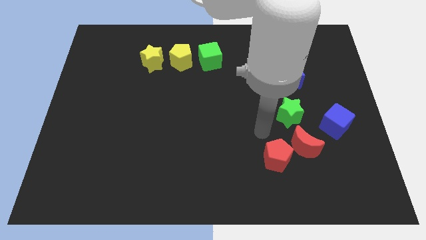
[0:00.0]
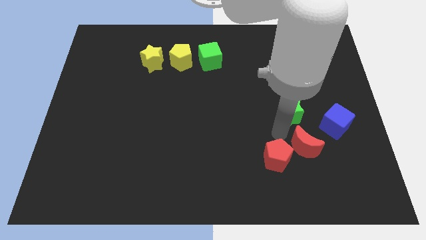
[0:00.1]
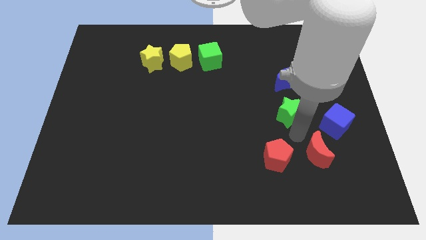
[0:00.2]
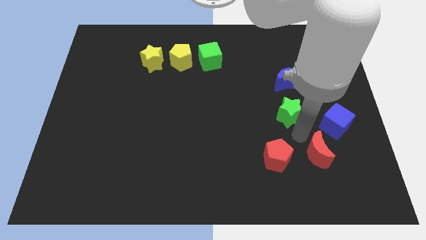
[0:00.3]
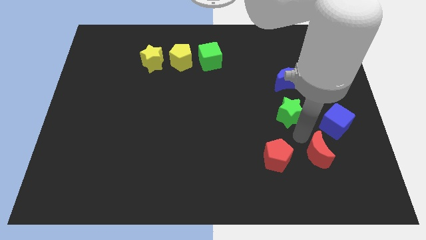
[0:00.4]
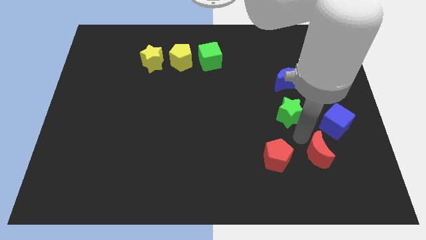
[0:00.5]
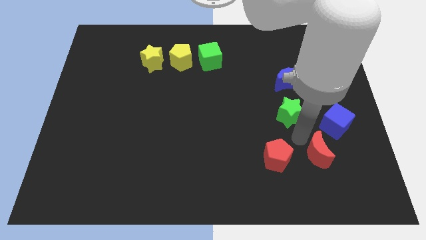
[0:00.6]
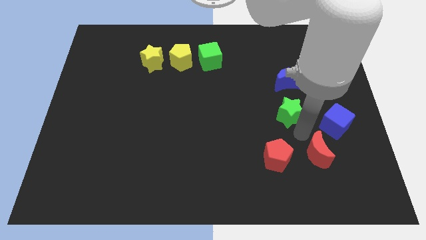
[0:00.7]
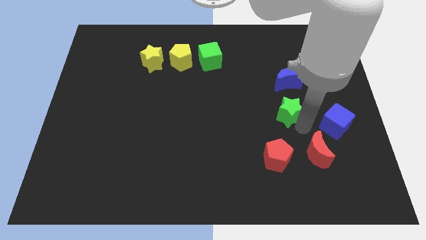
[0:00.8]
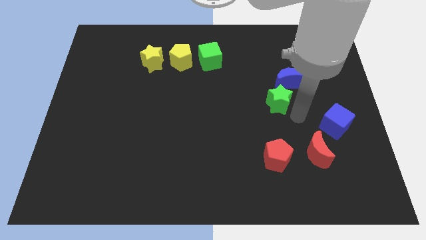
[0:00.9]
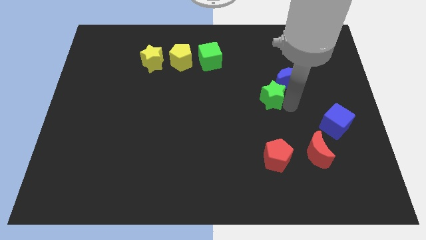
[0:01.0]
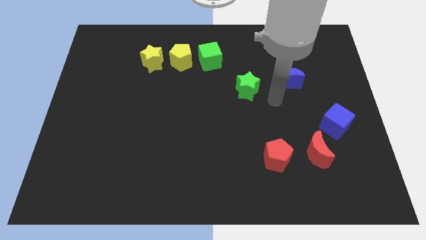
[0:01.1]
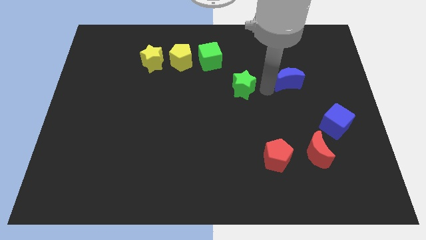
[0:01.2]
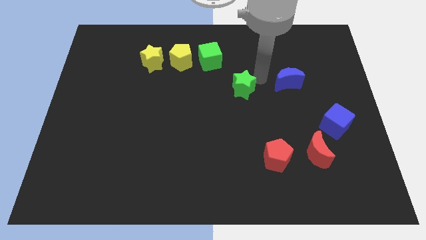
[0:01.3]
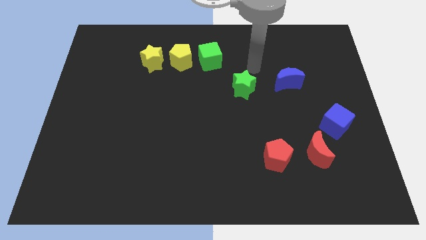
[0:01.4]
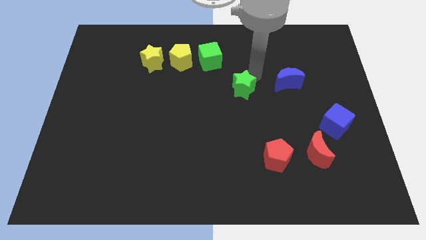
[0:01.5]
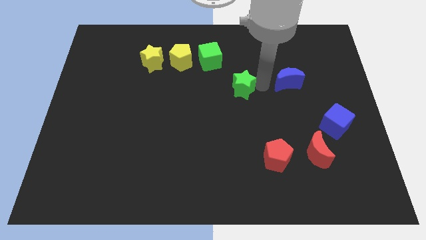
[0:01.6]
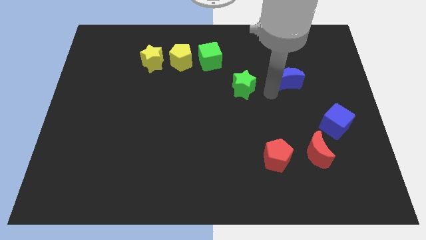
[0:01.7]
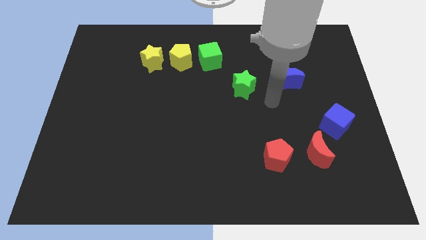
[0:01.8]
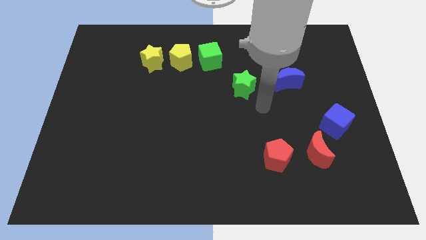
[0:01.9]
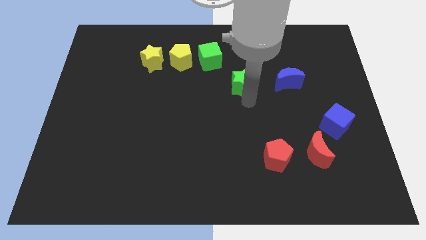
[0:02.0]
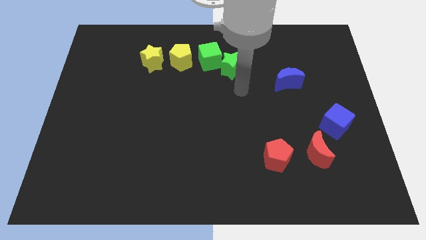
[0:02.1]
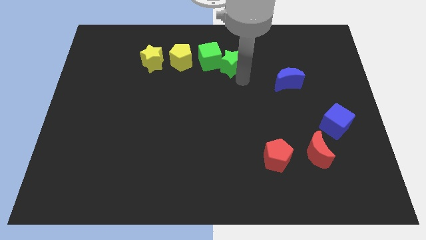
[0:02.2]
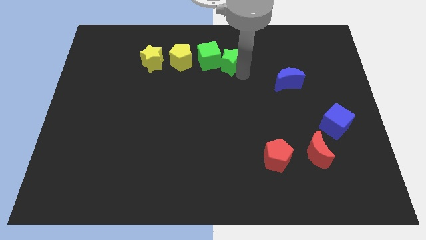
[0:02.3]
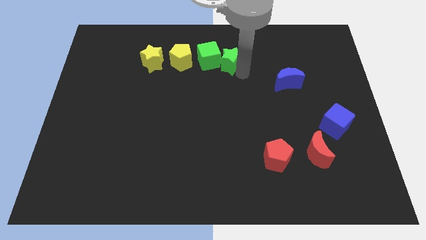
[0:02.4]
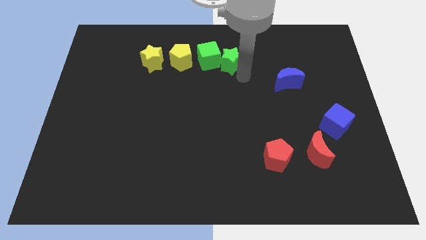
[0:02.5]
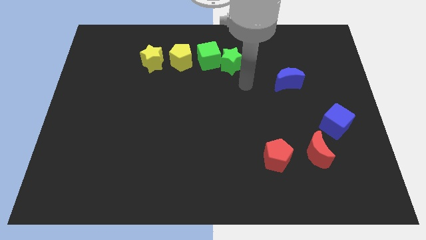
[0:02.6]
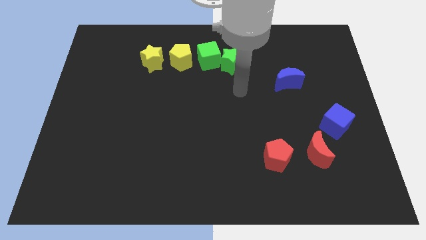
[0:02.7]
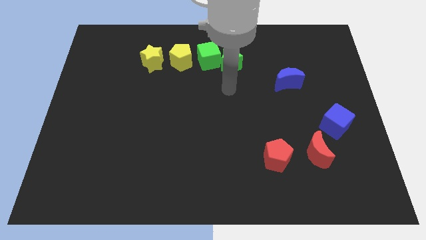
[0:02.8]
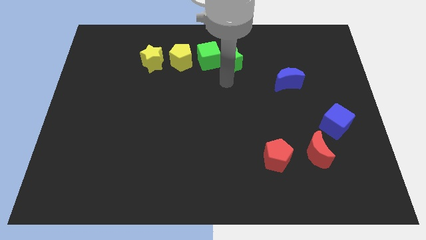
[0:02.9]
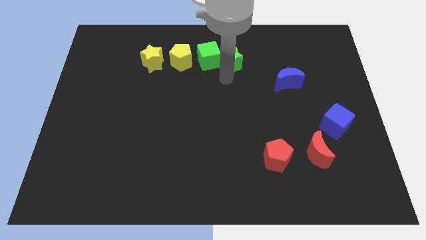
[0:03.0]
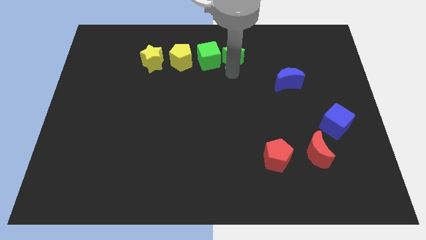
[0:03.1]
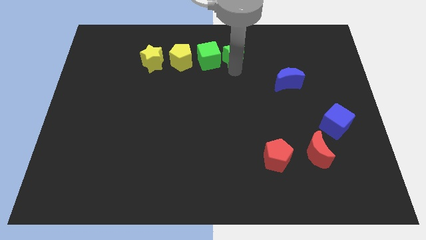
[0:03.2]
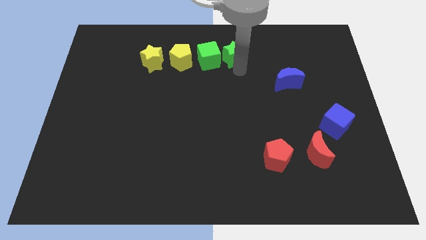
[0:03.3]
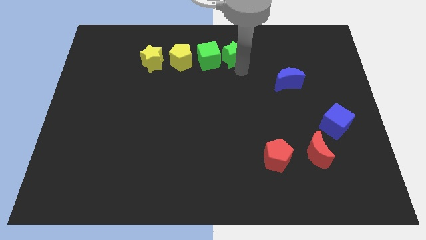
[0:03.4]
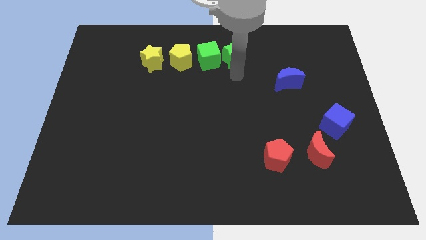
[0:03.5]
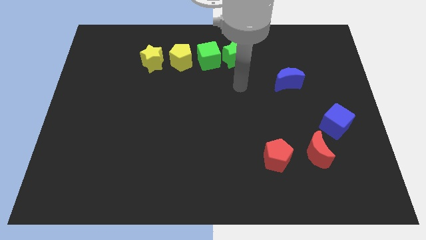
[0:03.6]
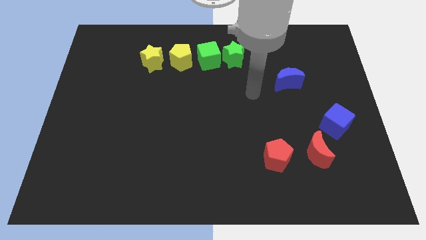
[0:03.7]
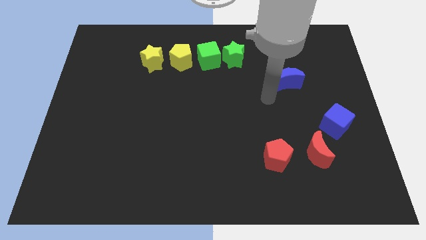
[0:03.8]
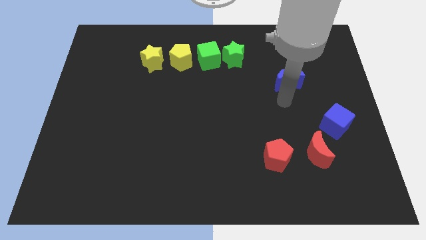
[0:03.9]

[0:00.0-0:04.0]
place the green star to the right of green cube

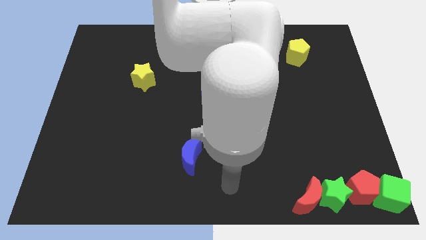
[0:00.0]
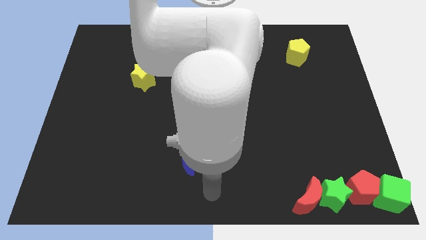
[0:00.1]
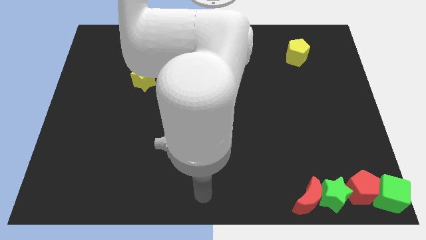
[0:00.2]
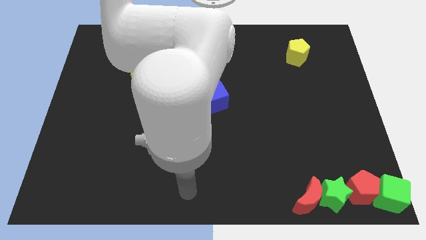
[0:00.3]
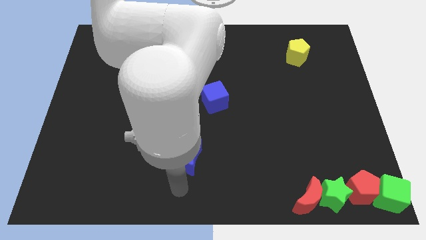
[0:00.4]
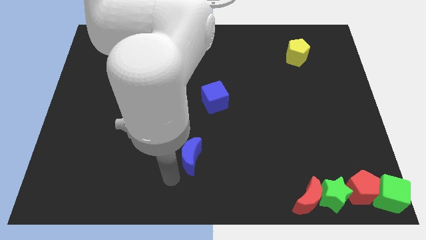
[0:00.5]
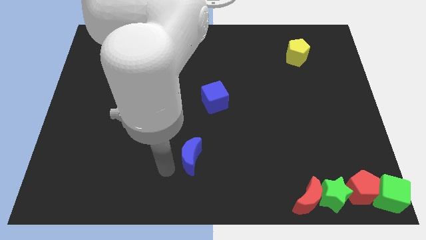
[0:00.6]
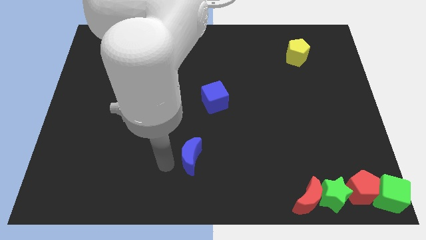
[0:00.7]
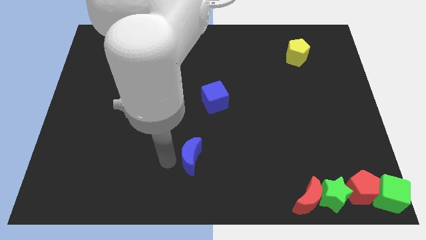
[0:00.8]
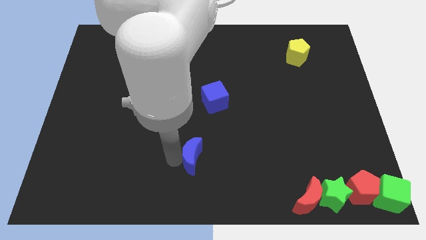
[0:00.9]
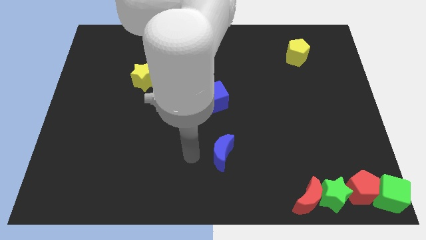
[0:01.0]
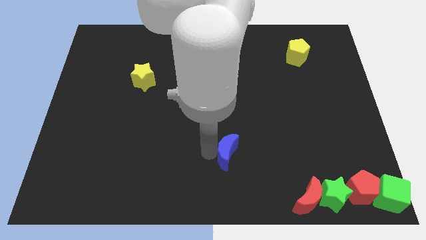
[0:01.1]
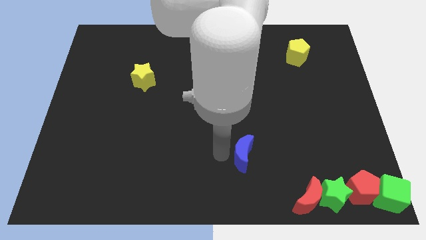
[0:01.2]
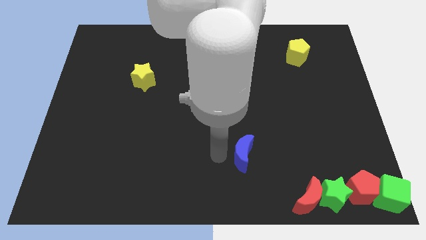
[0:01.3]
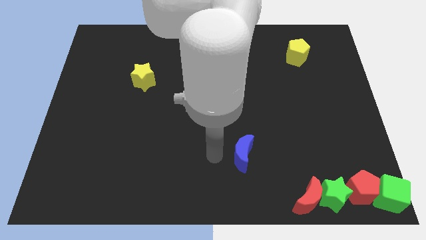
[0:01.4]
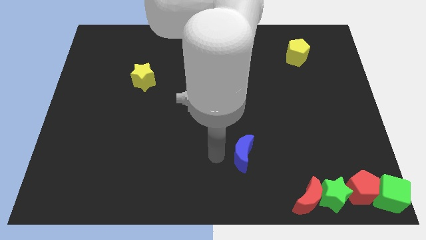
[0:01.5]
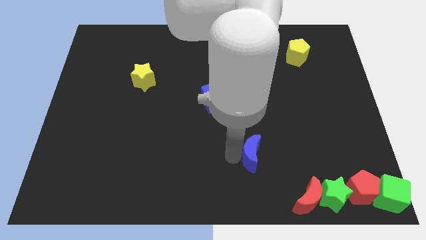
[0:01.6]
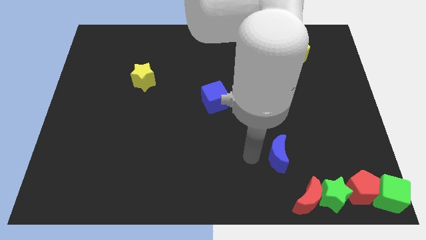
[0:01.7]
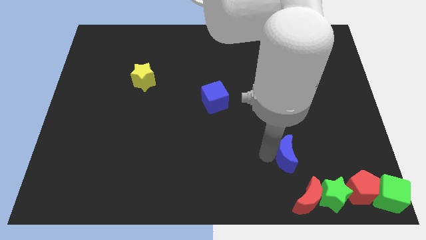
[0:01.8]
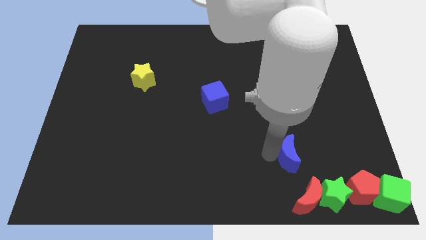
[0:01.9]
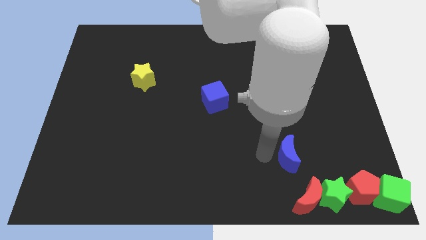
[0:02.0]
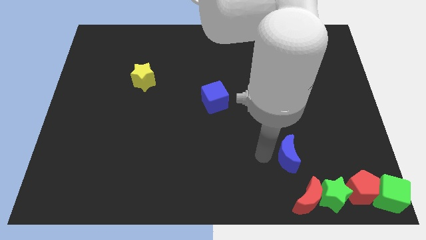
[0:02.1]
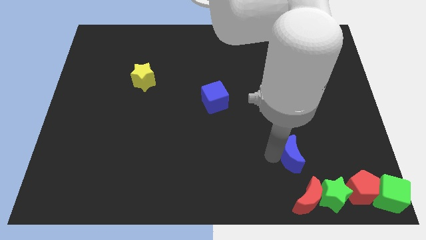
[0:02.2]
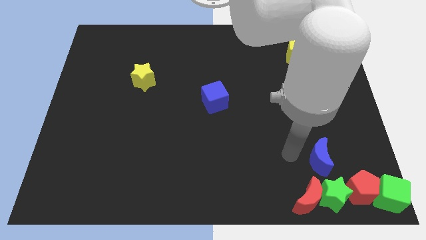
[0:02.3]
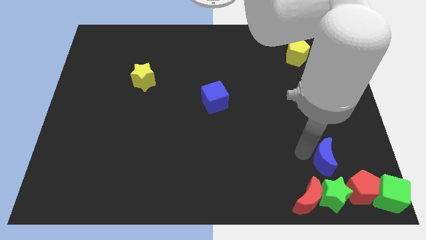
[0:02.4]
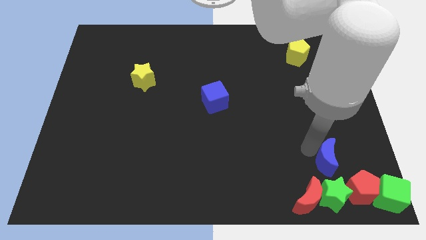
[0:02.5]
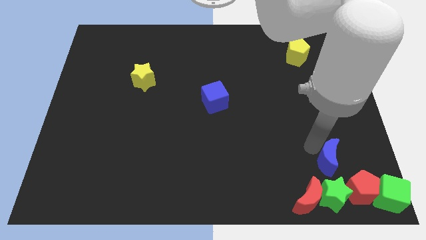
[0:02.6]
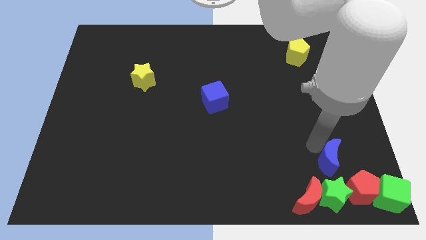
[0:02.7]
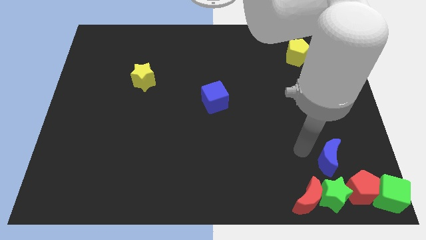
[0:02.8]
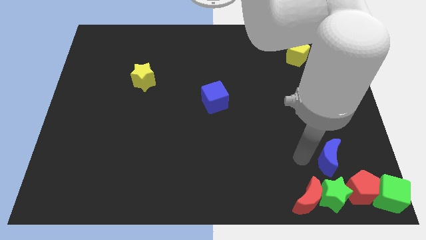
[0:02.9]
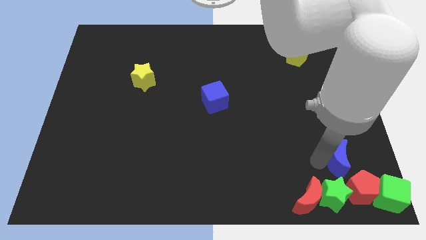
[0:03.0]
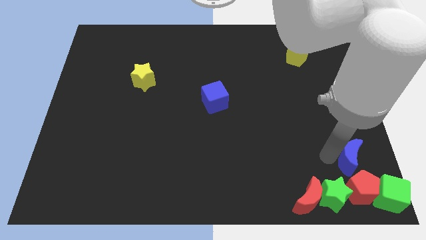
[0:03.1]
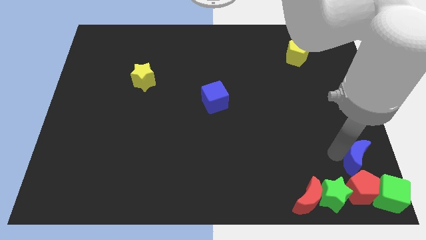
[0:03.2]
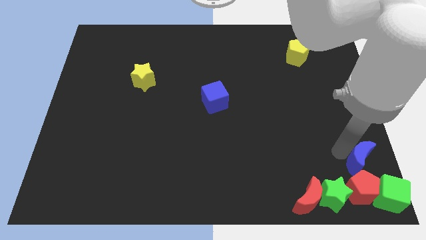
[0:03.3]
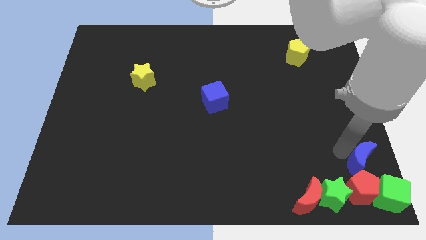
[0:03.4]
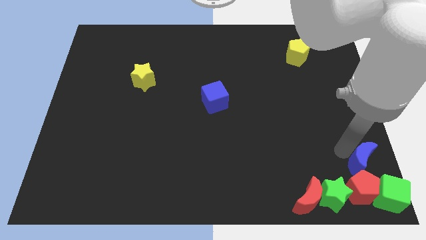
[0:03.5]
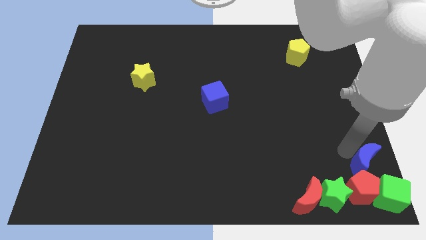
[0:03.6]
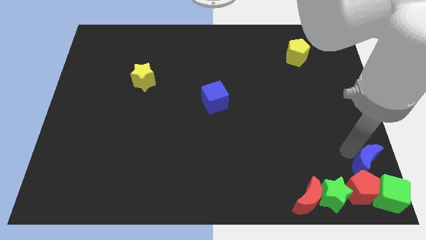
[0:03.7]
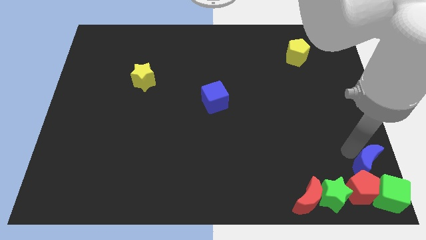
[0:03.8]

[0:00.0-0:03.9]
move the blue moon to the top right side of the red pentagon

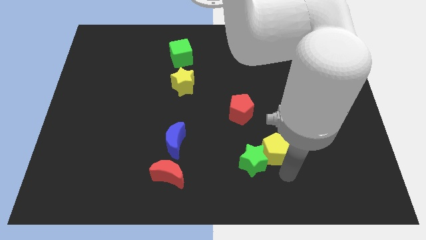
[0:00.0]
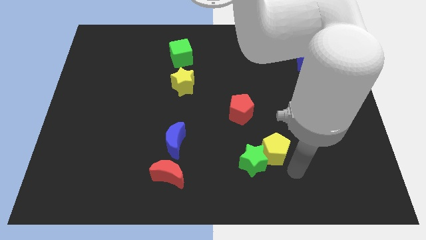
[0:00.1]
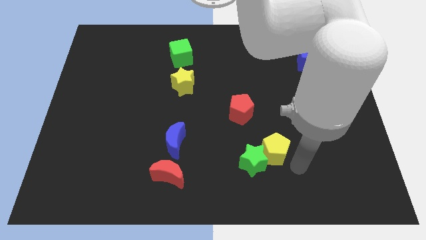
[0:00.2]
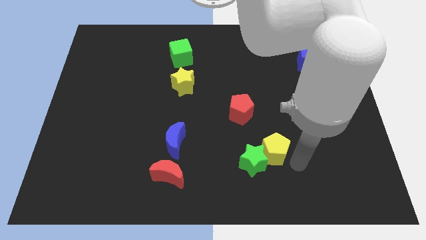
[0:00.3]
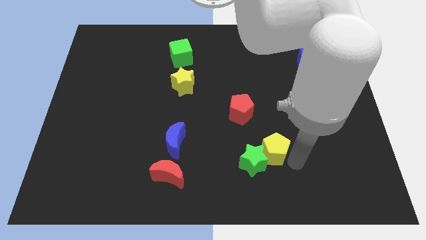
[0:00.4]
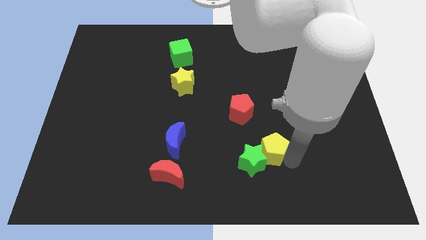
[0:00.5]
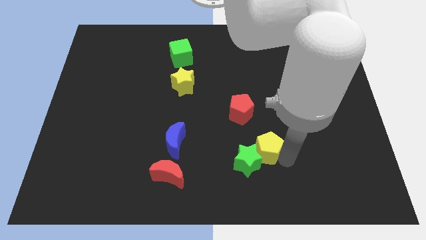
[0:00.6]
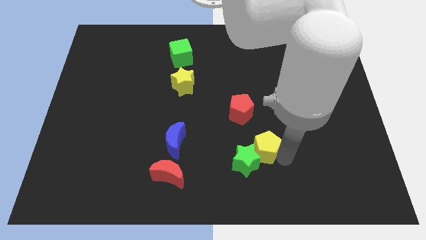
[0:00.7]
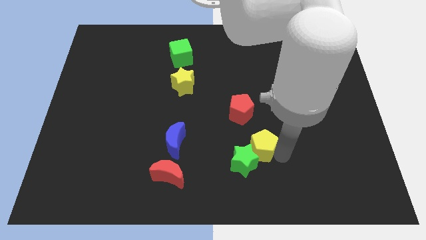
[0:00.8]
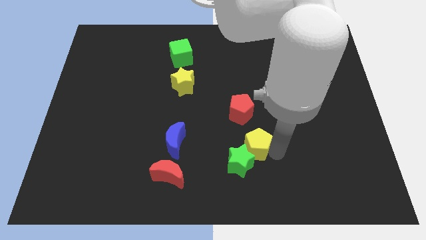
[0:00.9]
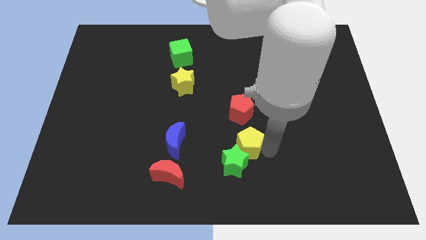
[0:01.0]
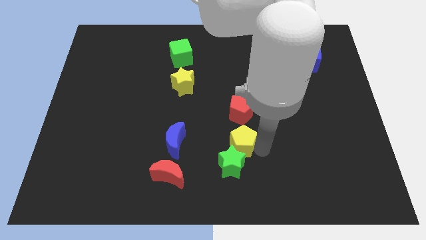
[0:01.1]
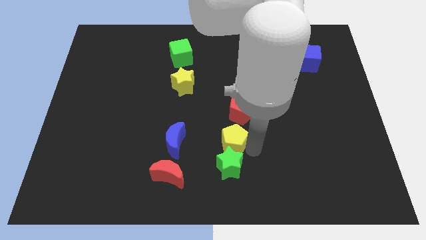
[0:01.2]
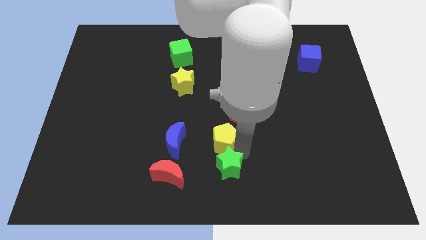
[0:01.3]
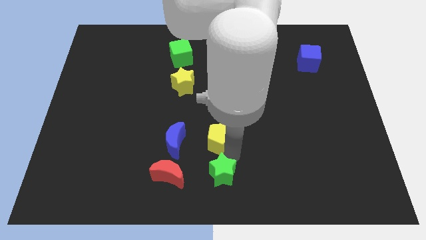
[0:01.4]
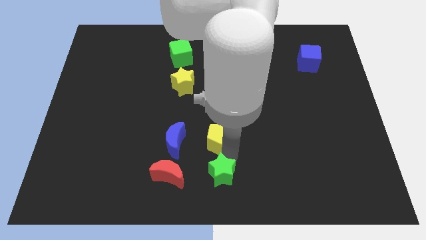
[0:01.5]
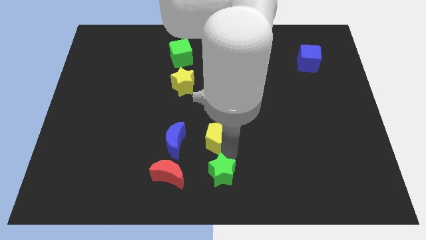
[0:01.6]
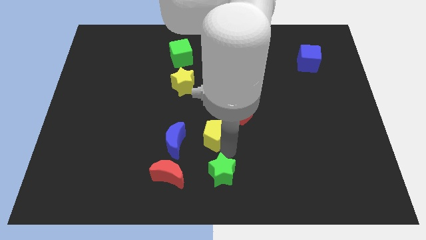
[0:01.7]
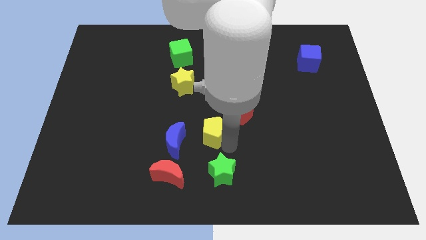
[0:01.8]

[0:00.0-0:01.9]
separate the yellow pentagon and green star
